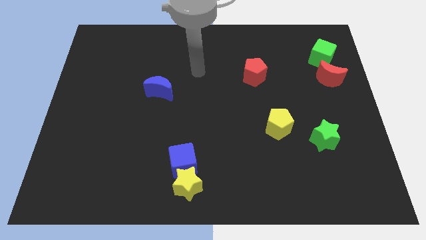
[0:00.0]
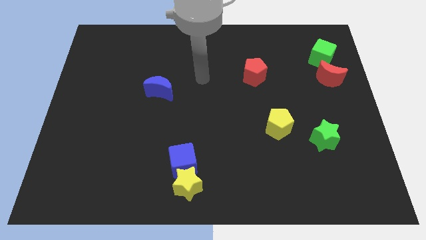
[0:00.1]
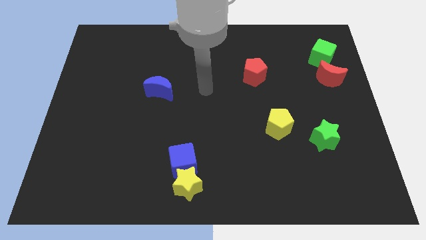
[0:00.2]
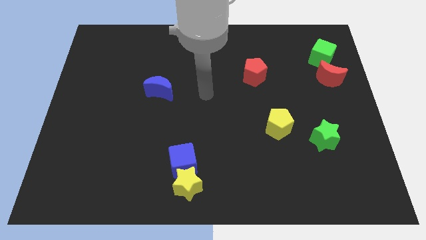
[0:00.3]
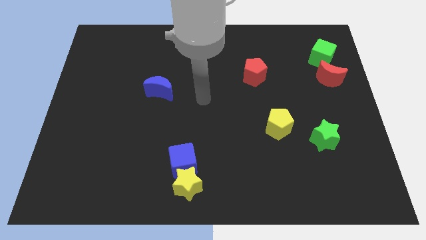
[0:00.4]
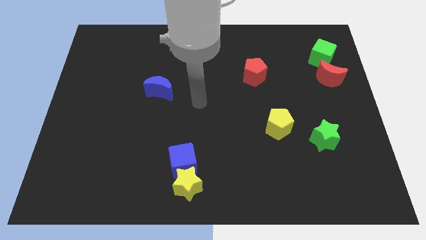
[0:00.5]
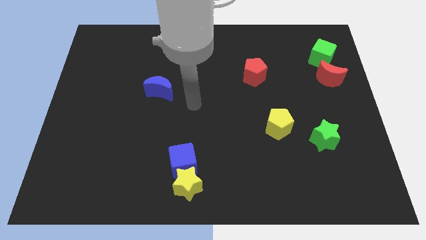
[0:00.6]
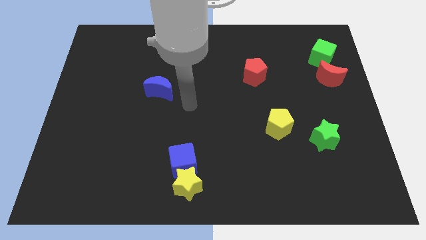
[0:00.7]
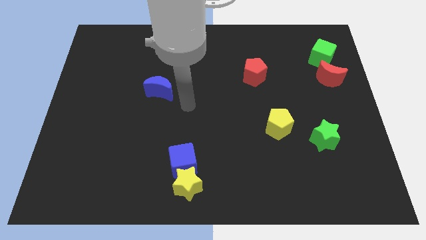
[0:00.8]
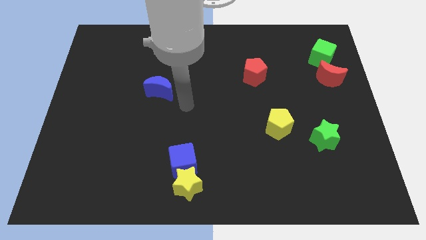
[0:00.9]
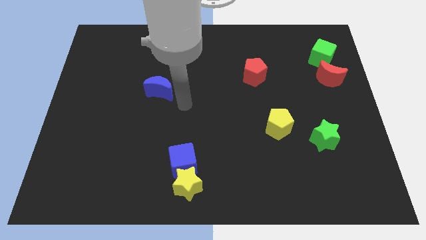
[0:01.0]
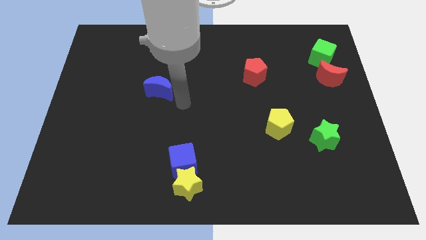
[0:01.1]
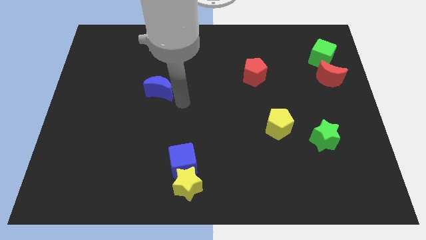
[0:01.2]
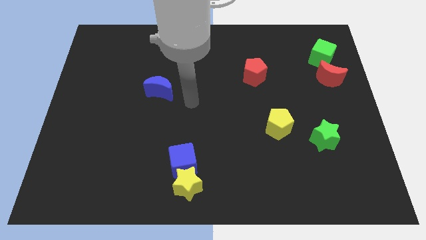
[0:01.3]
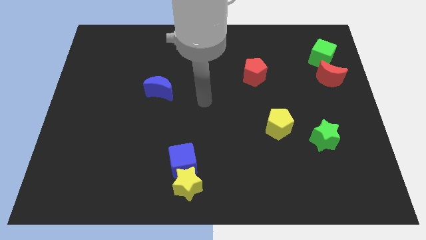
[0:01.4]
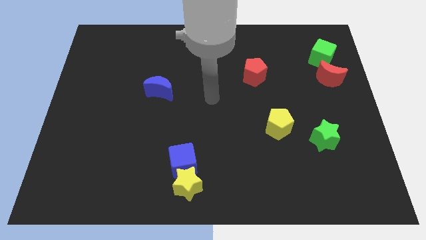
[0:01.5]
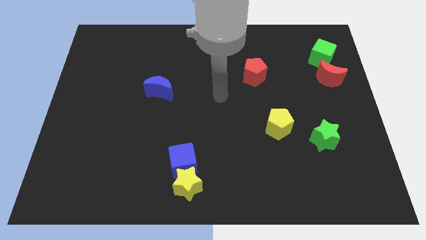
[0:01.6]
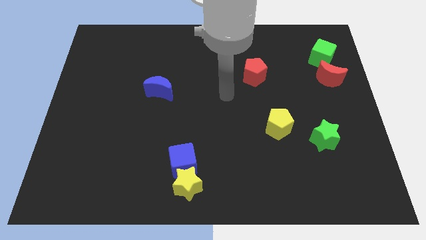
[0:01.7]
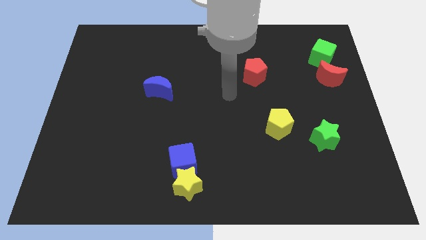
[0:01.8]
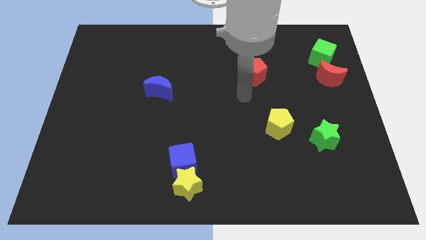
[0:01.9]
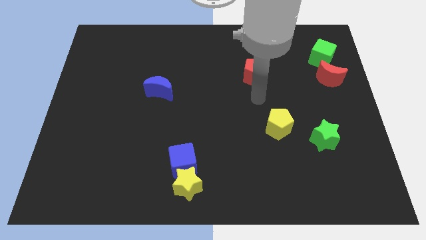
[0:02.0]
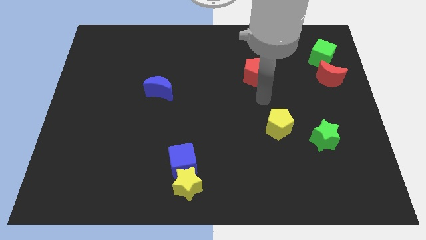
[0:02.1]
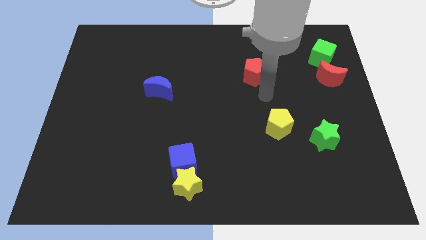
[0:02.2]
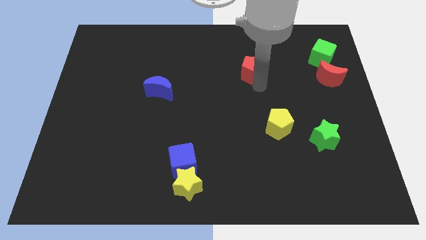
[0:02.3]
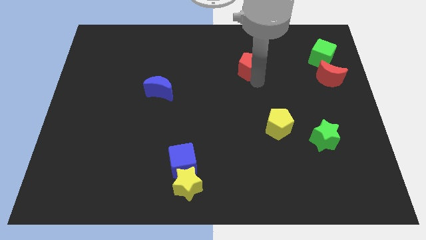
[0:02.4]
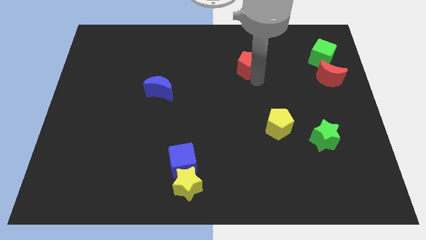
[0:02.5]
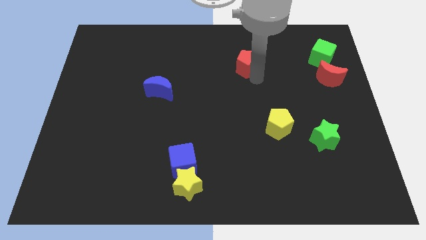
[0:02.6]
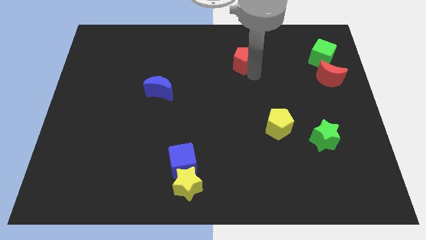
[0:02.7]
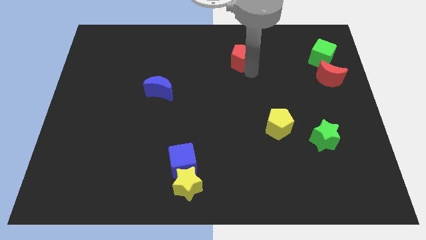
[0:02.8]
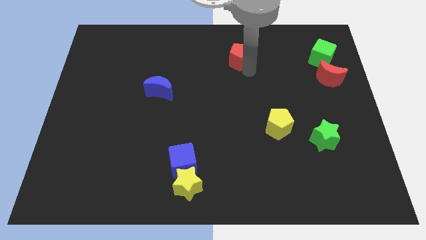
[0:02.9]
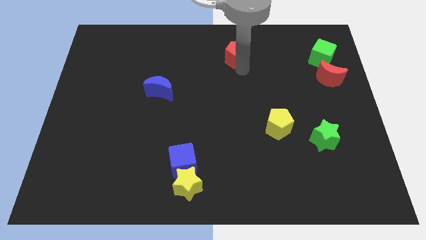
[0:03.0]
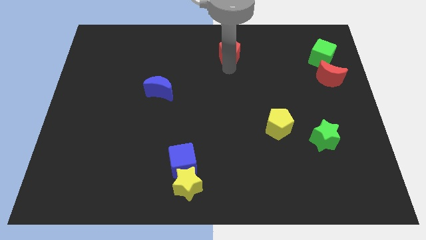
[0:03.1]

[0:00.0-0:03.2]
place the red pentagon parallel to the green cube

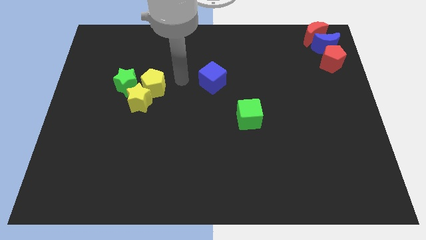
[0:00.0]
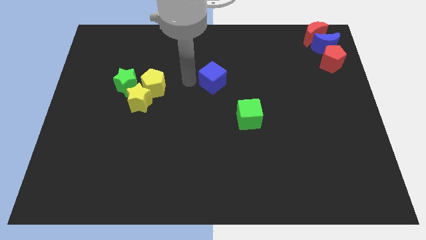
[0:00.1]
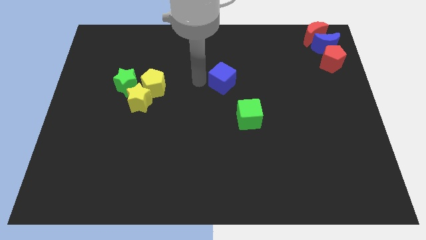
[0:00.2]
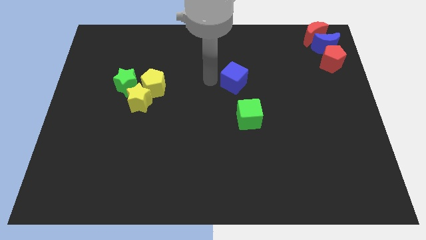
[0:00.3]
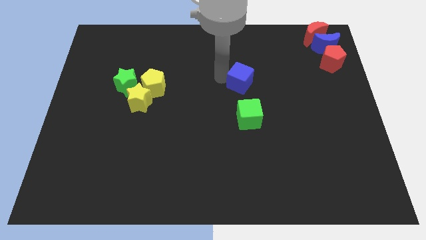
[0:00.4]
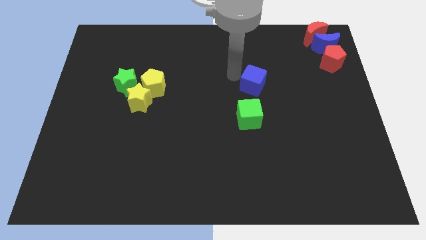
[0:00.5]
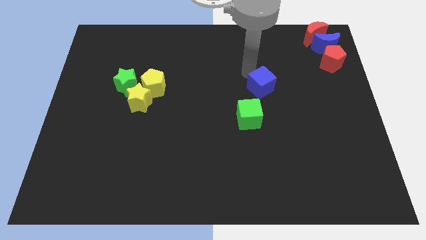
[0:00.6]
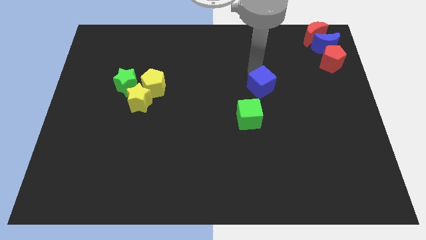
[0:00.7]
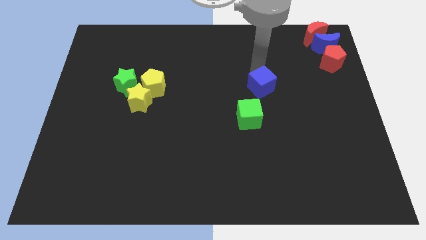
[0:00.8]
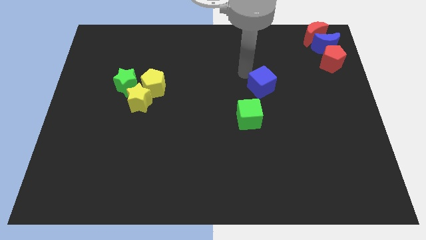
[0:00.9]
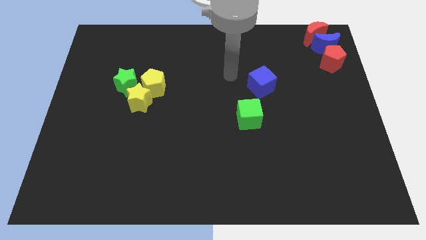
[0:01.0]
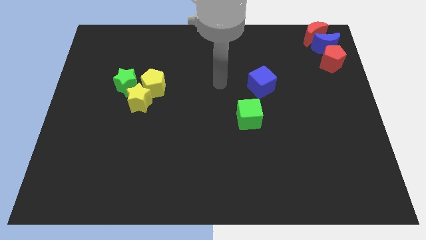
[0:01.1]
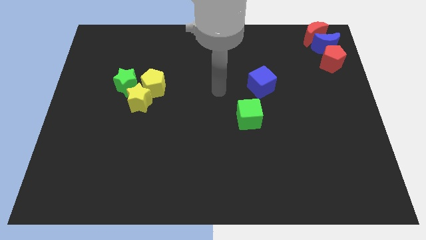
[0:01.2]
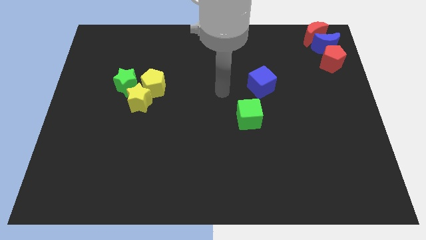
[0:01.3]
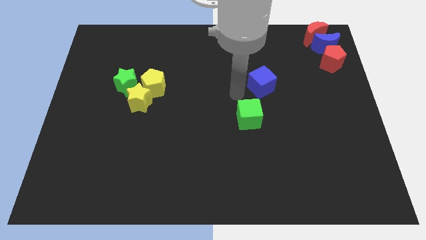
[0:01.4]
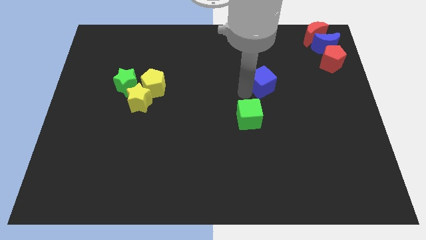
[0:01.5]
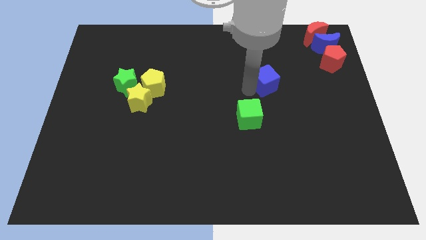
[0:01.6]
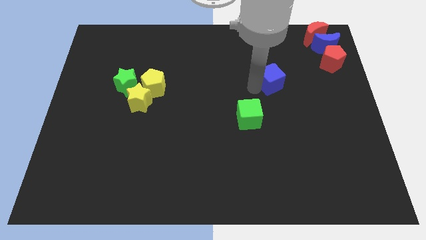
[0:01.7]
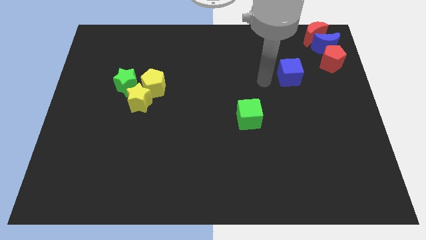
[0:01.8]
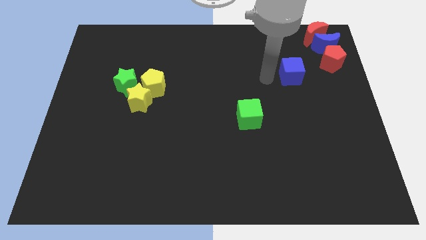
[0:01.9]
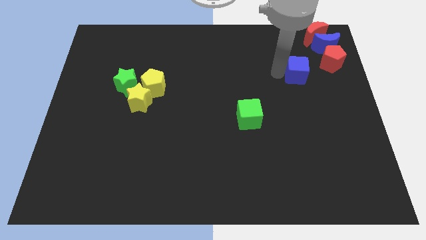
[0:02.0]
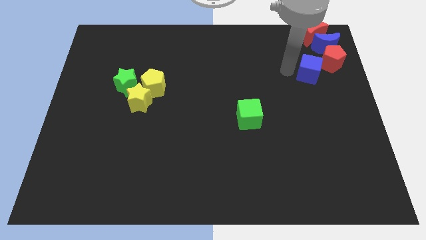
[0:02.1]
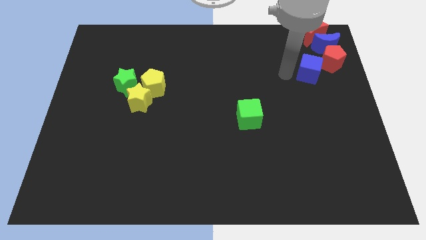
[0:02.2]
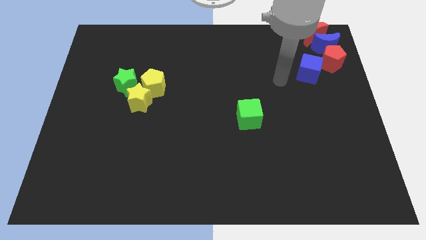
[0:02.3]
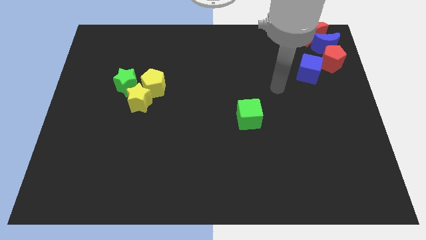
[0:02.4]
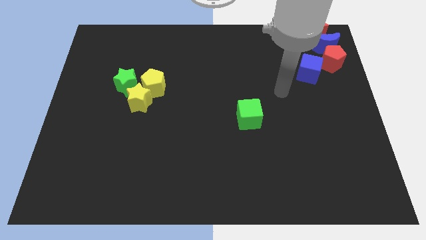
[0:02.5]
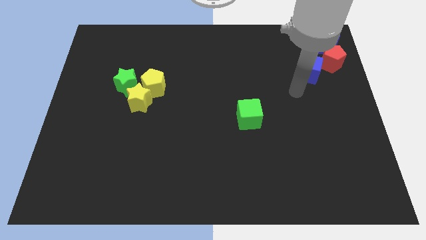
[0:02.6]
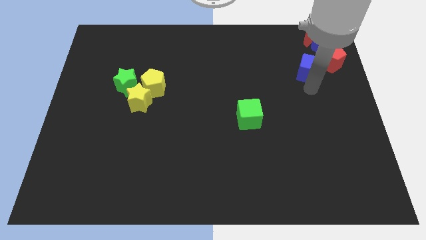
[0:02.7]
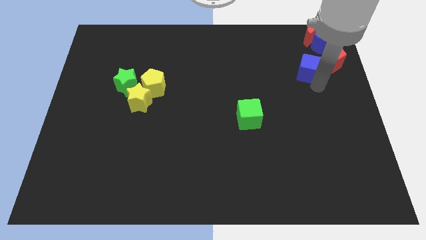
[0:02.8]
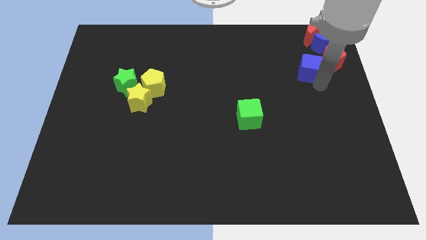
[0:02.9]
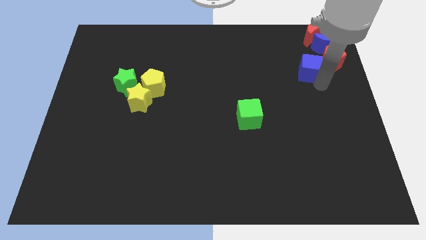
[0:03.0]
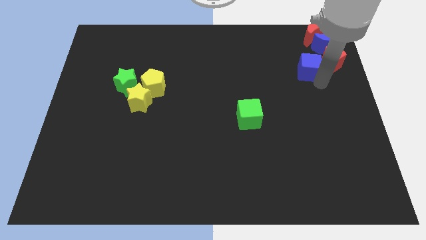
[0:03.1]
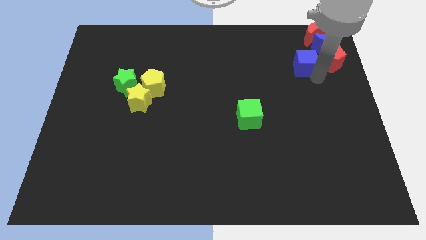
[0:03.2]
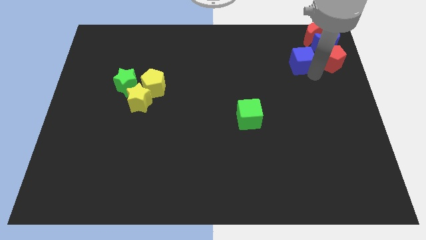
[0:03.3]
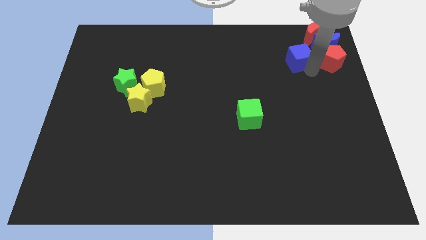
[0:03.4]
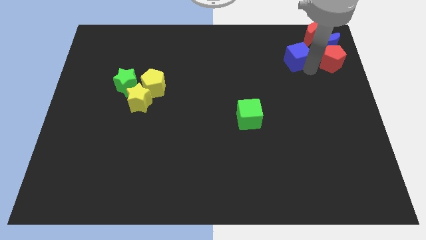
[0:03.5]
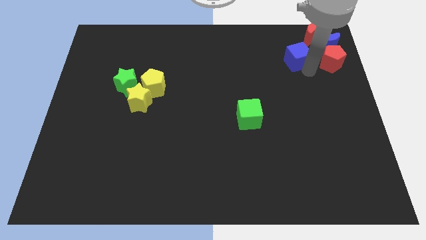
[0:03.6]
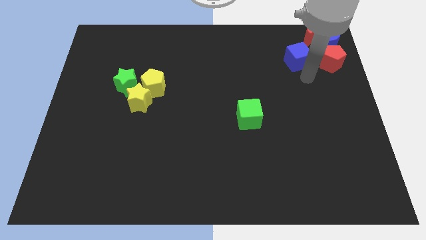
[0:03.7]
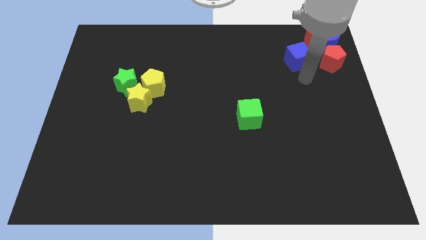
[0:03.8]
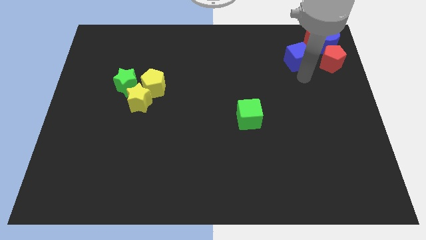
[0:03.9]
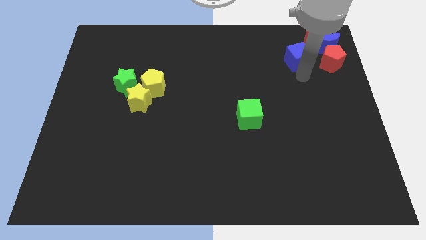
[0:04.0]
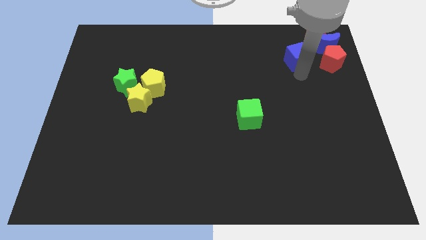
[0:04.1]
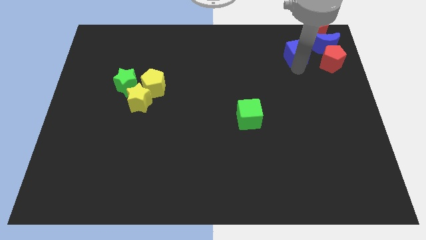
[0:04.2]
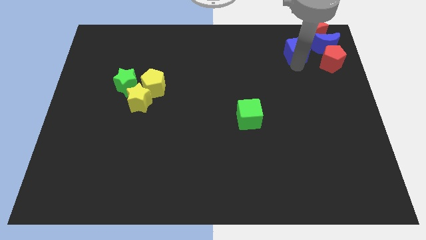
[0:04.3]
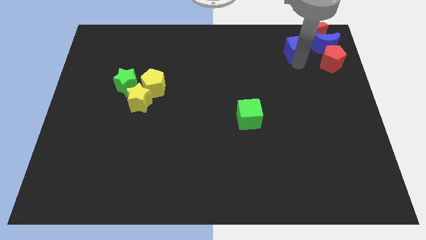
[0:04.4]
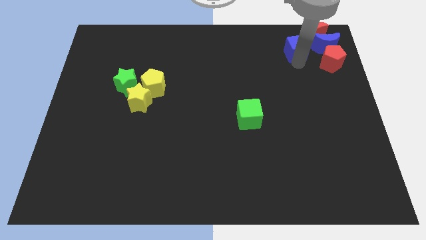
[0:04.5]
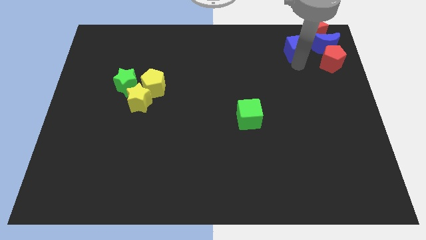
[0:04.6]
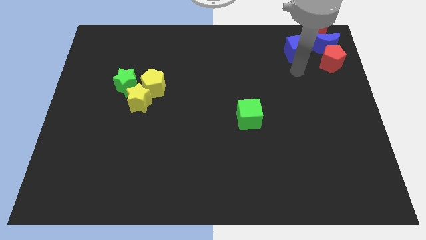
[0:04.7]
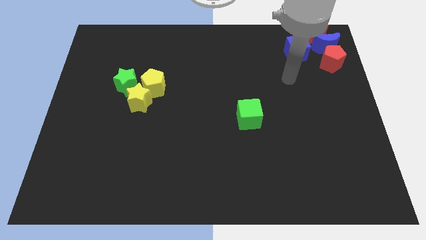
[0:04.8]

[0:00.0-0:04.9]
move the blue cube to the left side of the blue moon

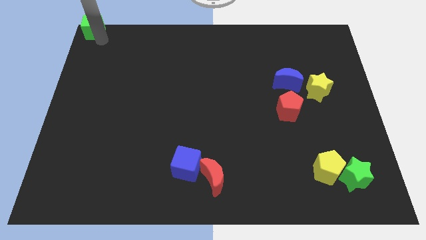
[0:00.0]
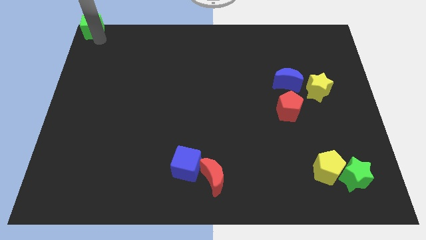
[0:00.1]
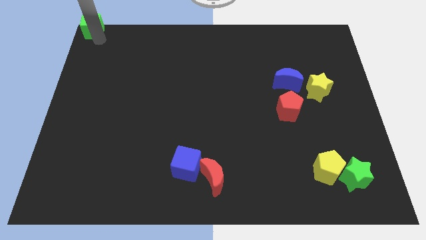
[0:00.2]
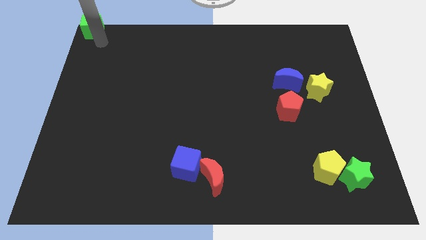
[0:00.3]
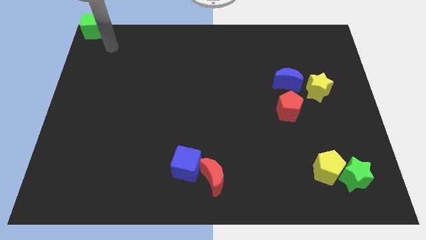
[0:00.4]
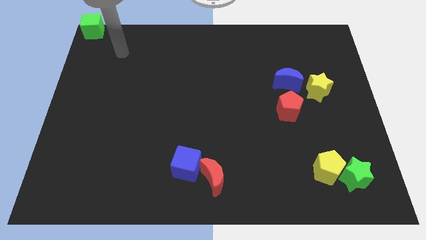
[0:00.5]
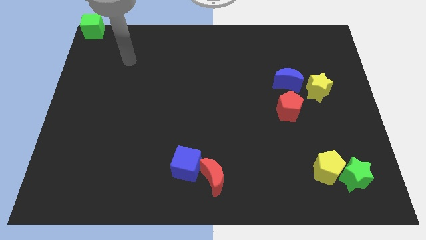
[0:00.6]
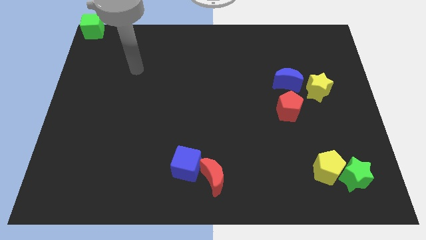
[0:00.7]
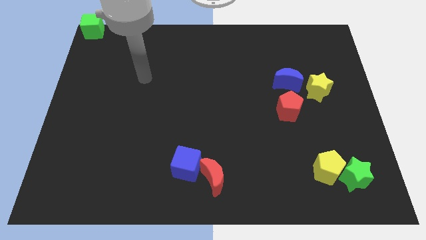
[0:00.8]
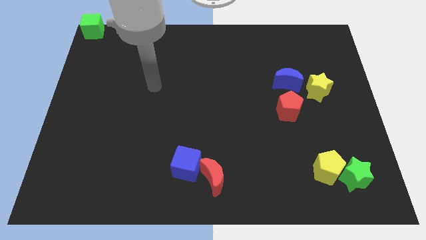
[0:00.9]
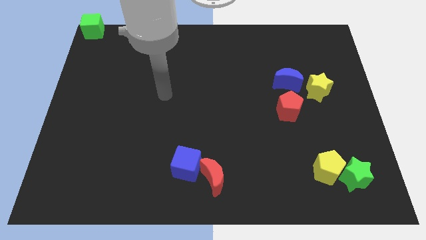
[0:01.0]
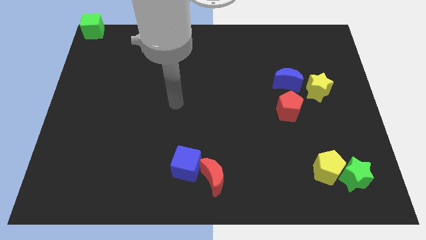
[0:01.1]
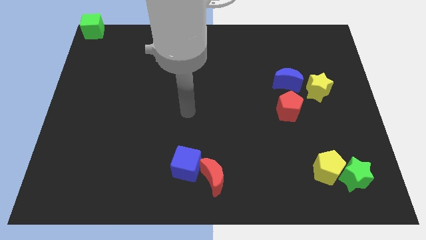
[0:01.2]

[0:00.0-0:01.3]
move your arm away from the green cube
